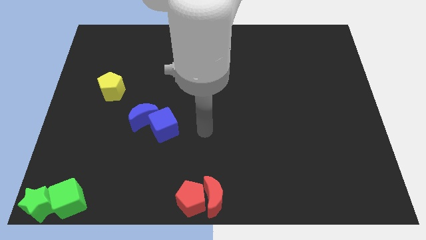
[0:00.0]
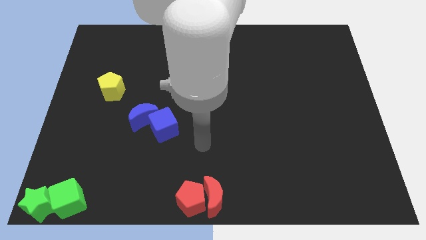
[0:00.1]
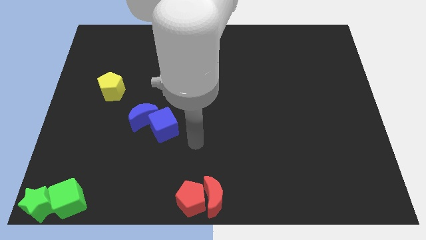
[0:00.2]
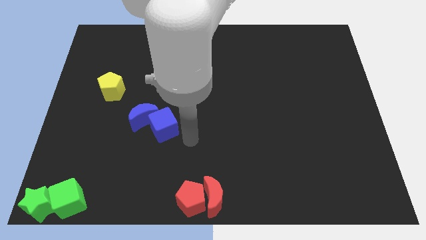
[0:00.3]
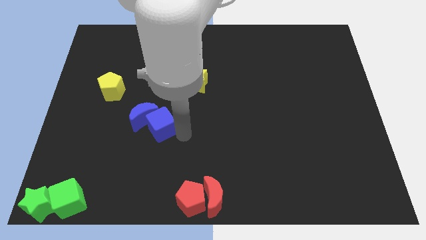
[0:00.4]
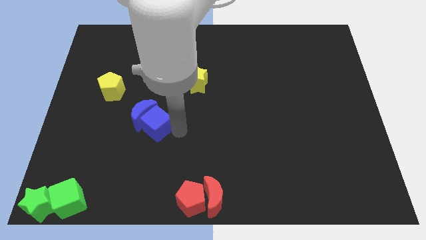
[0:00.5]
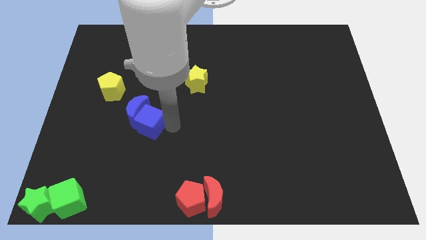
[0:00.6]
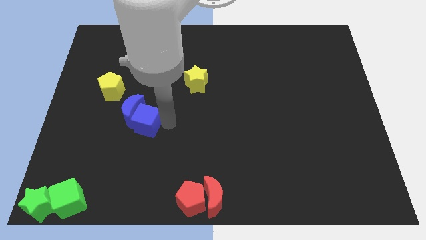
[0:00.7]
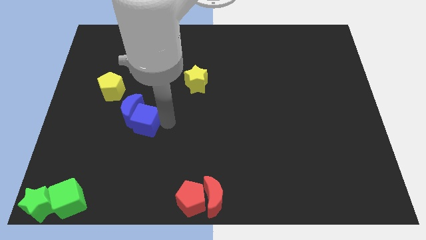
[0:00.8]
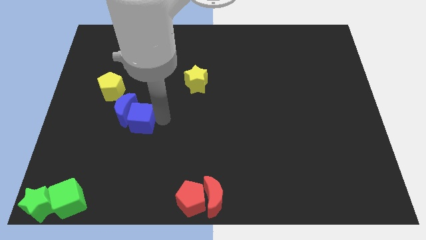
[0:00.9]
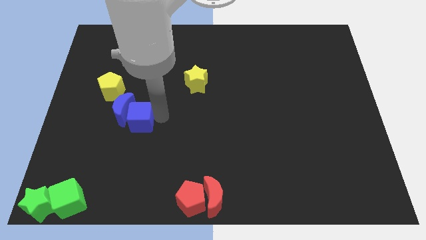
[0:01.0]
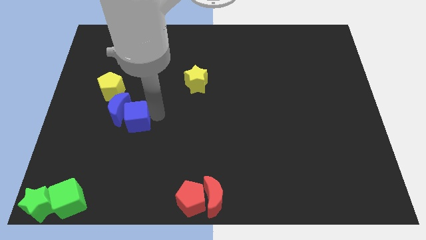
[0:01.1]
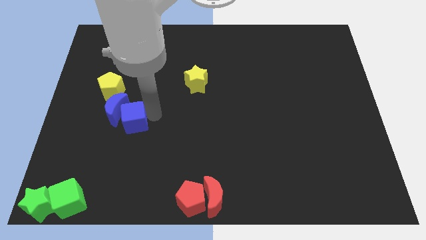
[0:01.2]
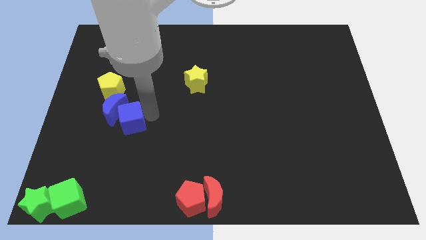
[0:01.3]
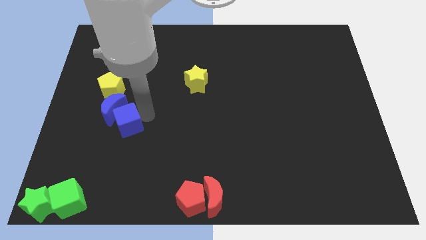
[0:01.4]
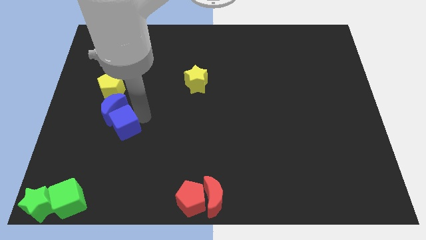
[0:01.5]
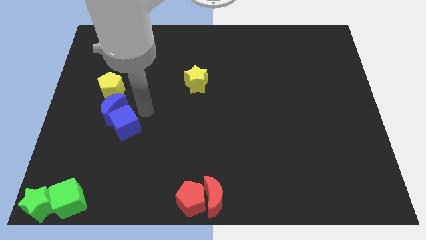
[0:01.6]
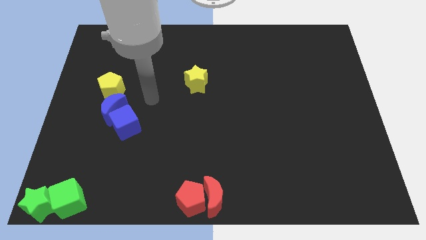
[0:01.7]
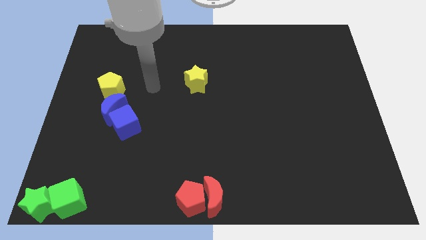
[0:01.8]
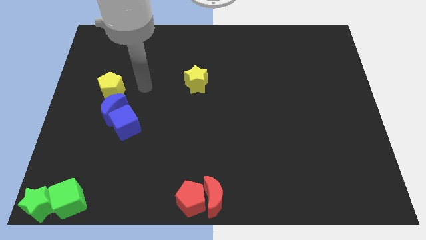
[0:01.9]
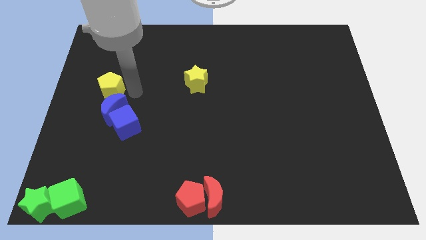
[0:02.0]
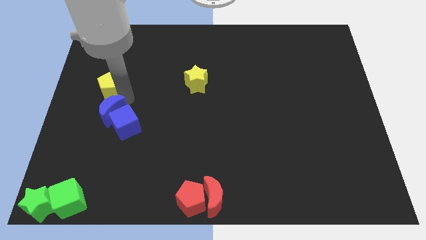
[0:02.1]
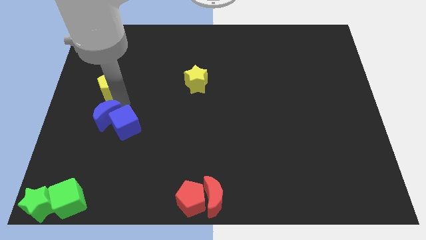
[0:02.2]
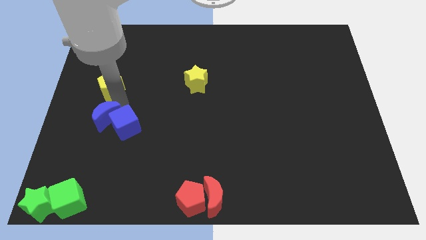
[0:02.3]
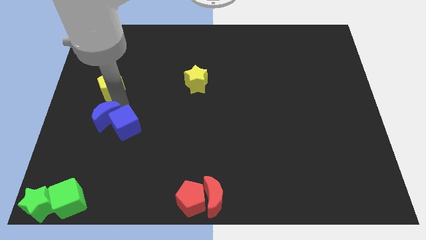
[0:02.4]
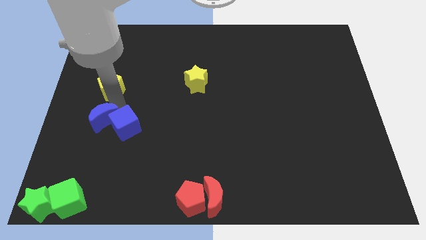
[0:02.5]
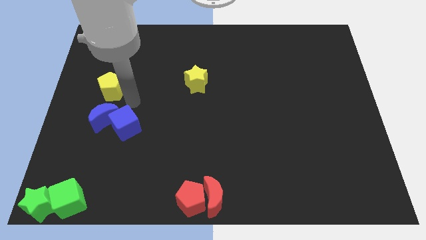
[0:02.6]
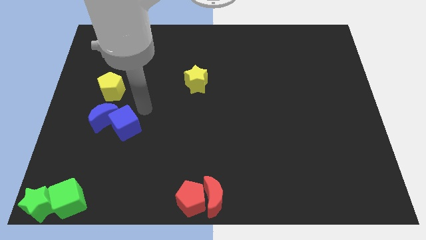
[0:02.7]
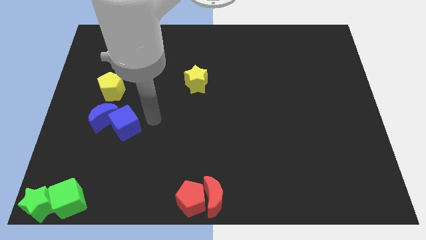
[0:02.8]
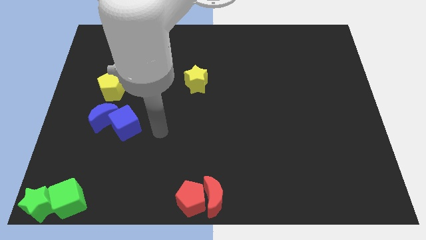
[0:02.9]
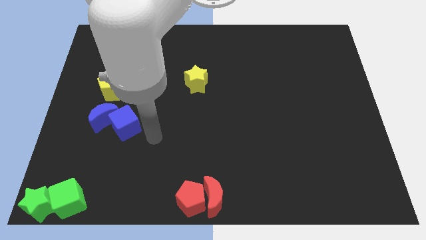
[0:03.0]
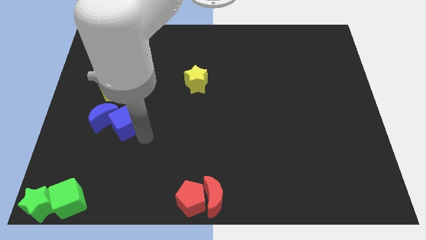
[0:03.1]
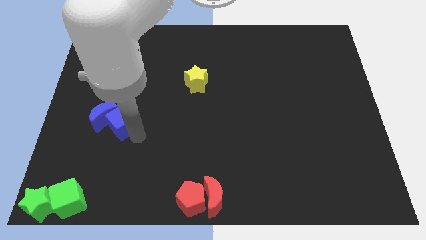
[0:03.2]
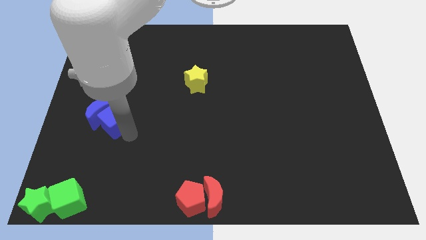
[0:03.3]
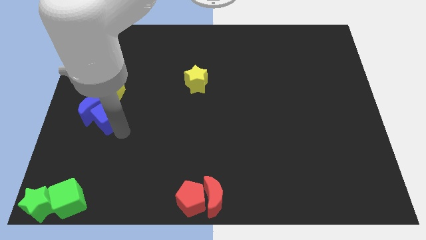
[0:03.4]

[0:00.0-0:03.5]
move the blue cube and blue crescent to the bottom side of the yellow pentagon

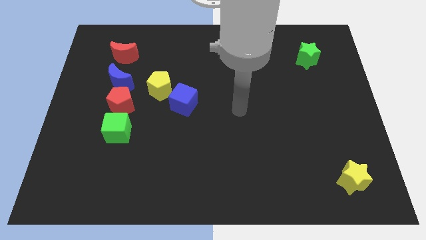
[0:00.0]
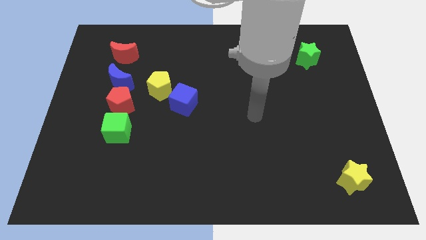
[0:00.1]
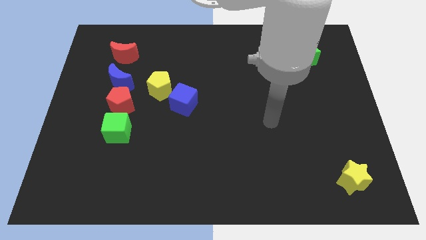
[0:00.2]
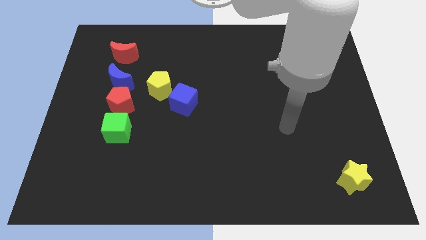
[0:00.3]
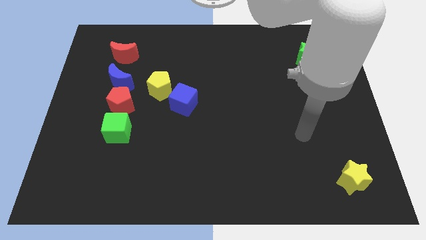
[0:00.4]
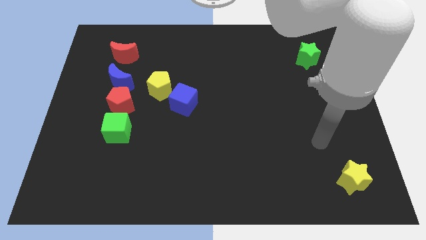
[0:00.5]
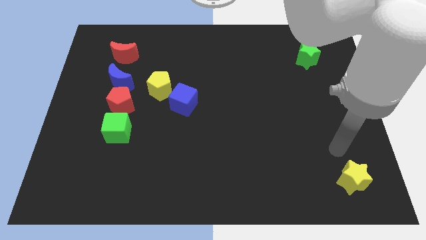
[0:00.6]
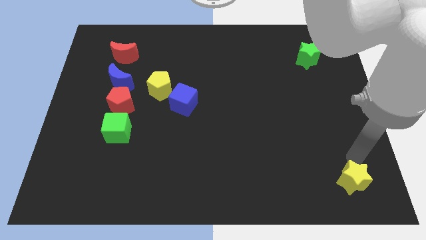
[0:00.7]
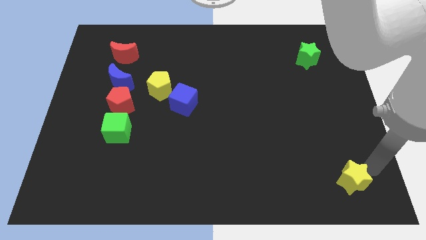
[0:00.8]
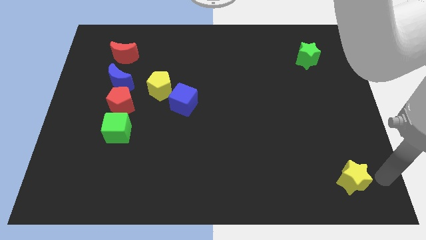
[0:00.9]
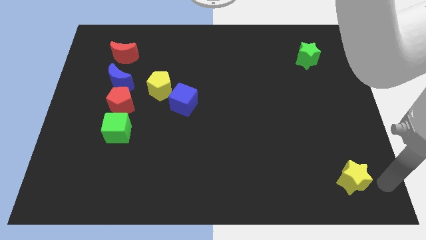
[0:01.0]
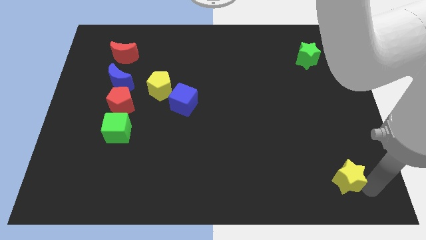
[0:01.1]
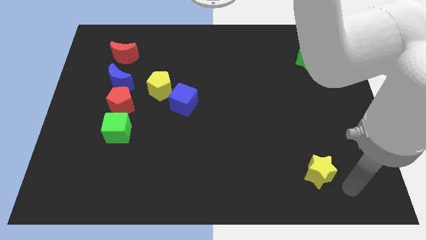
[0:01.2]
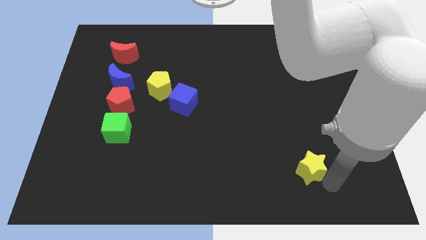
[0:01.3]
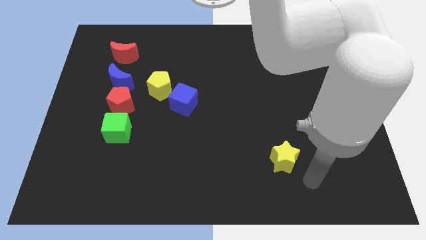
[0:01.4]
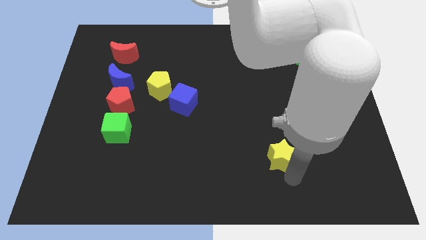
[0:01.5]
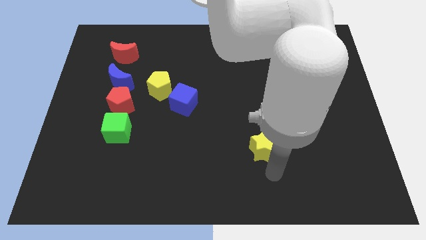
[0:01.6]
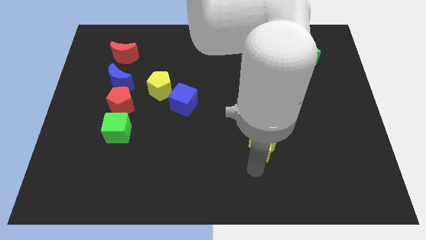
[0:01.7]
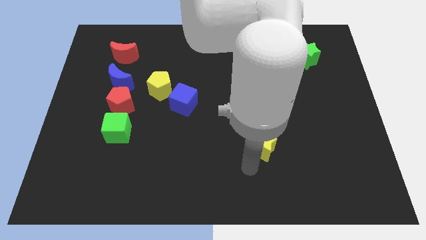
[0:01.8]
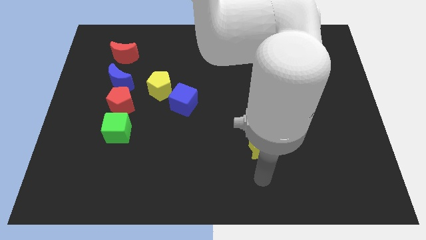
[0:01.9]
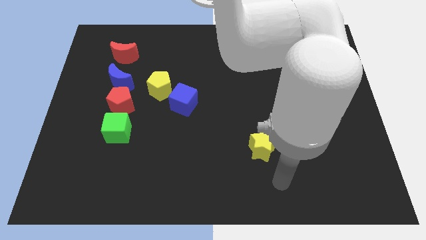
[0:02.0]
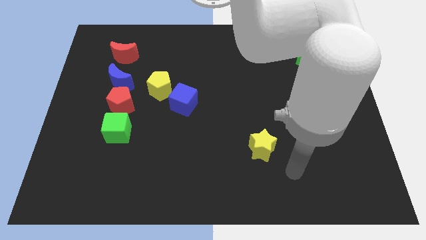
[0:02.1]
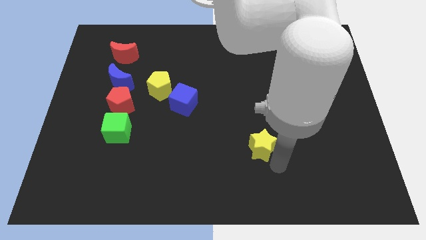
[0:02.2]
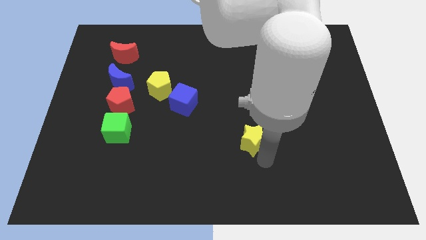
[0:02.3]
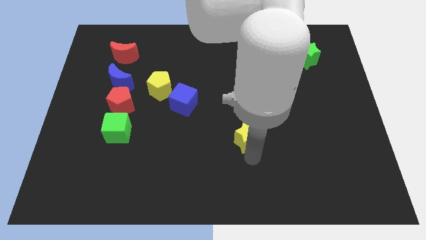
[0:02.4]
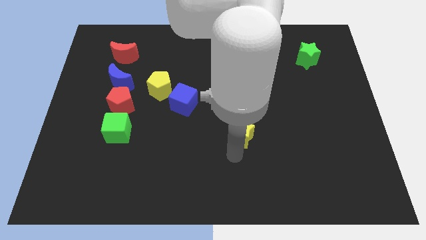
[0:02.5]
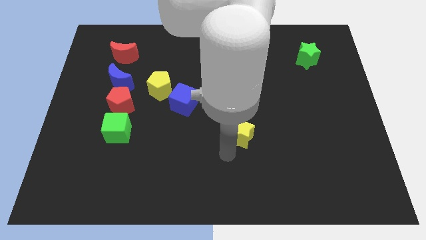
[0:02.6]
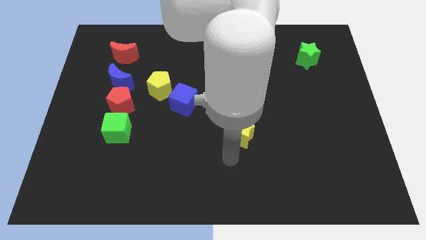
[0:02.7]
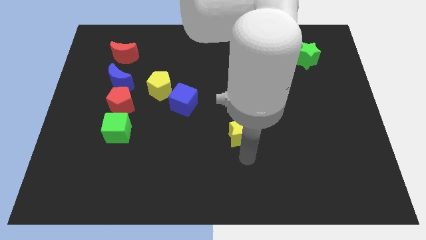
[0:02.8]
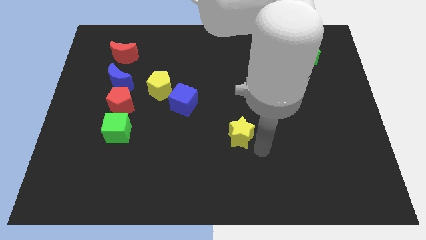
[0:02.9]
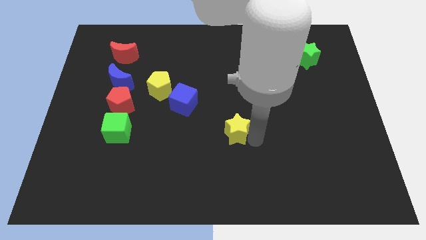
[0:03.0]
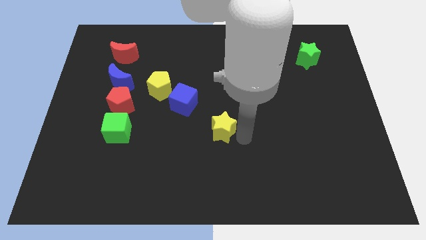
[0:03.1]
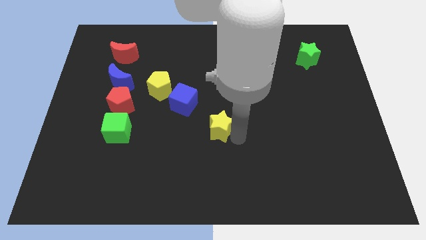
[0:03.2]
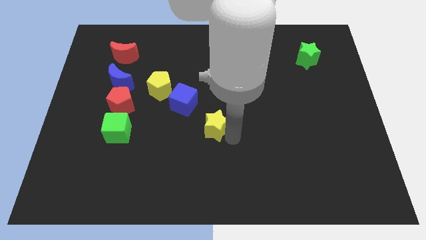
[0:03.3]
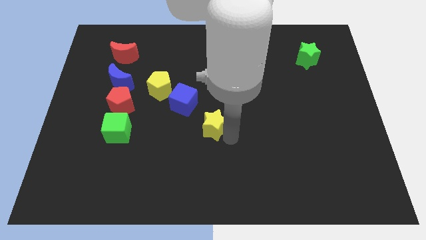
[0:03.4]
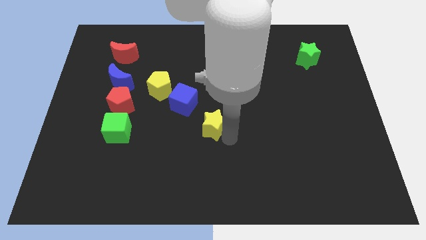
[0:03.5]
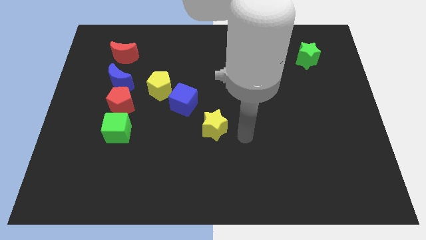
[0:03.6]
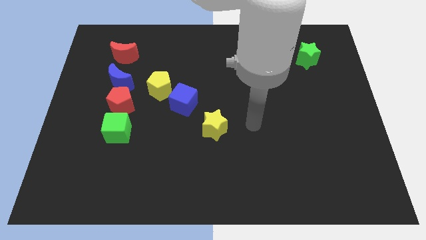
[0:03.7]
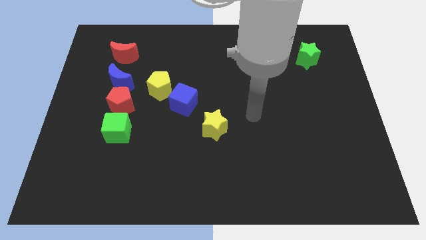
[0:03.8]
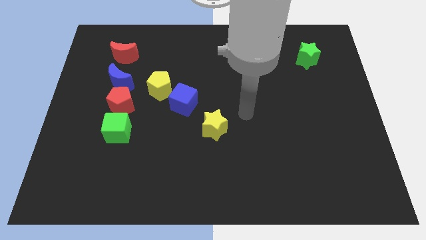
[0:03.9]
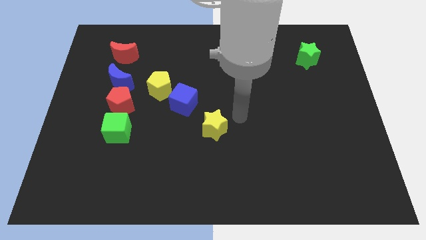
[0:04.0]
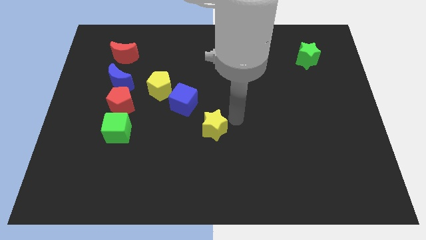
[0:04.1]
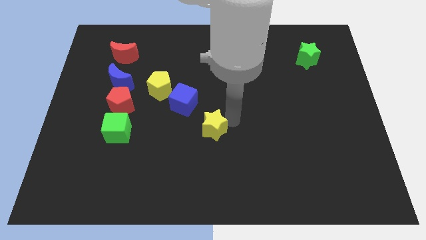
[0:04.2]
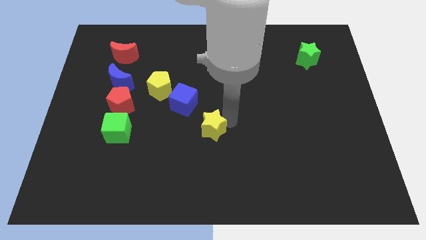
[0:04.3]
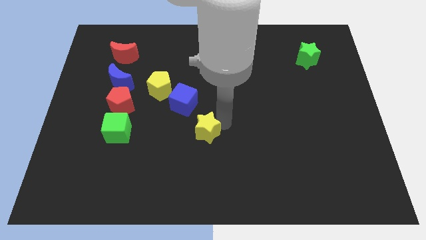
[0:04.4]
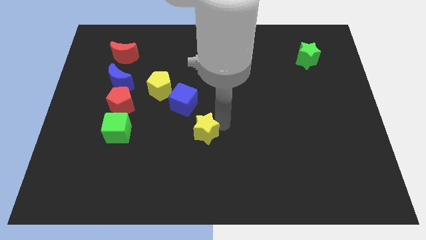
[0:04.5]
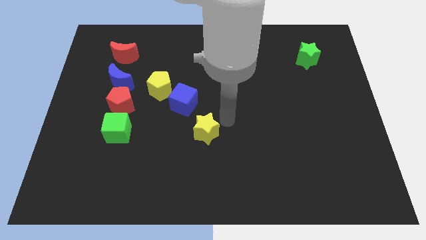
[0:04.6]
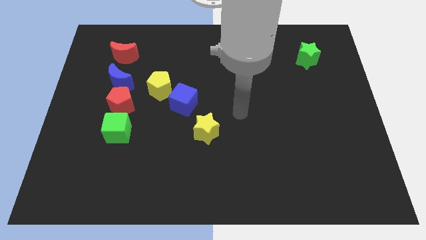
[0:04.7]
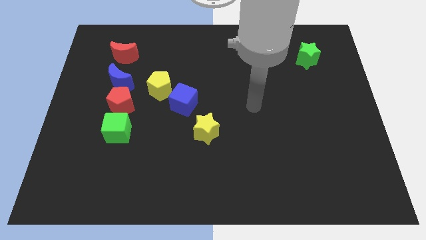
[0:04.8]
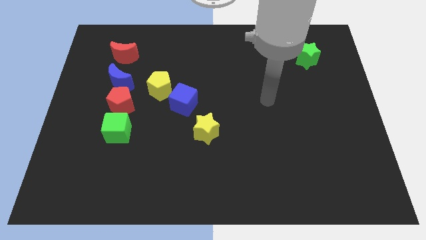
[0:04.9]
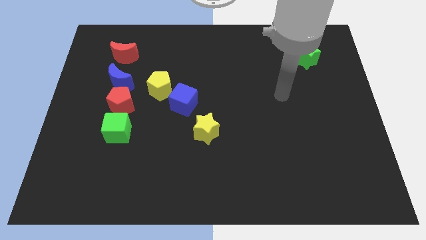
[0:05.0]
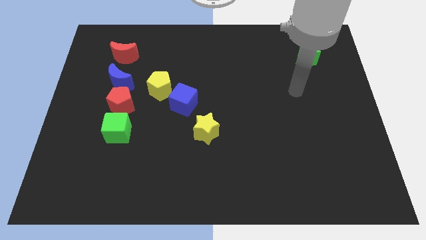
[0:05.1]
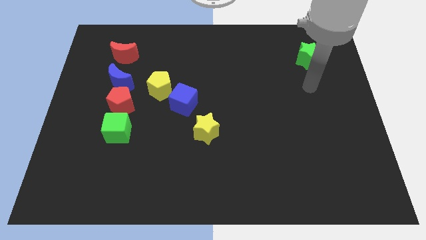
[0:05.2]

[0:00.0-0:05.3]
place the yellow star right to the green cube

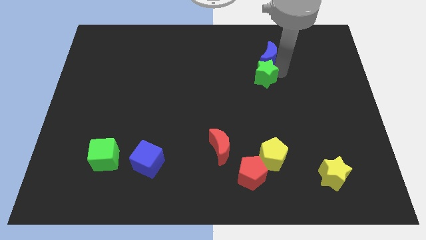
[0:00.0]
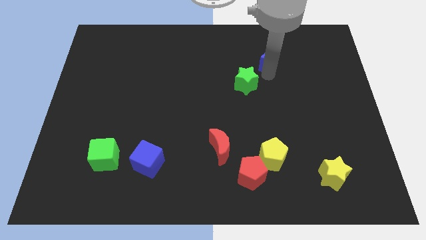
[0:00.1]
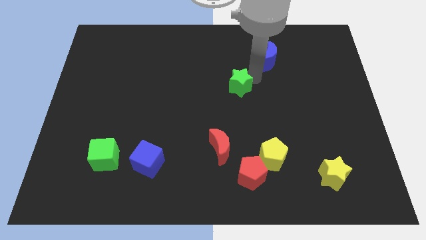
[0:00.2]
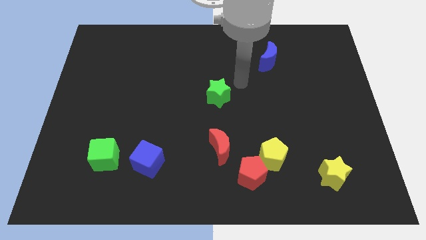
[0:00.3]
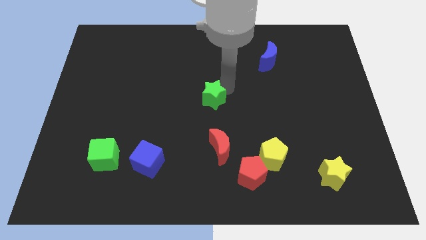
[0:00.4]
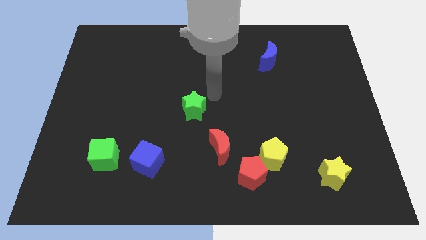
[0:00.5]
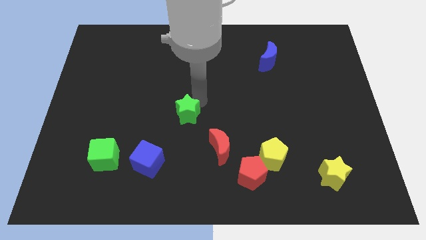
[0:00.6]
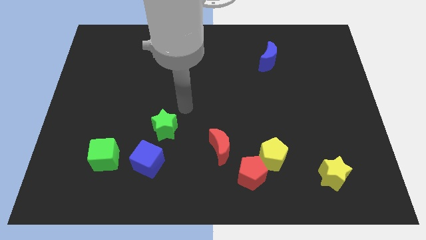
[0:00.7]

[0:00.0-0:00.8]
push the green star towards the blue cube
